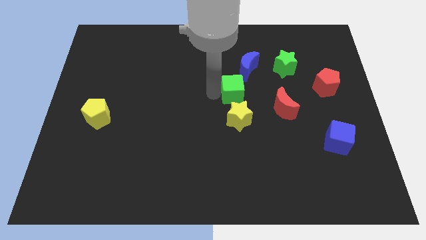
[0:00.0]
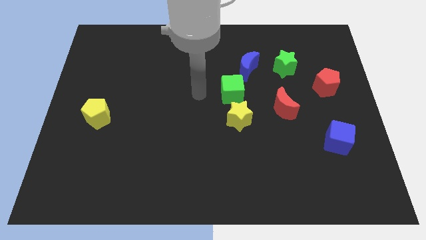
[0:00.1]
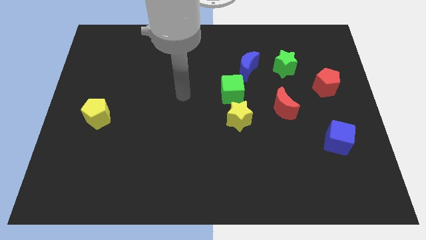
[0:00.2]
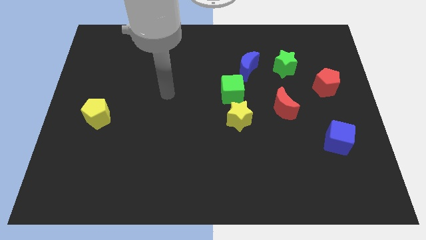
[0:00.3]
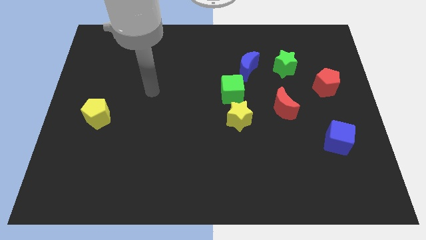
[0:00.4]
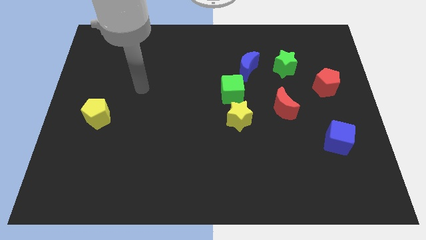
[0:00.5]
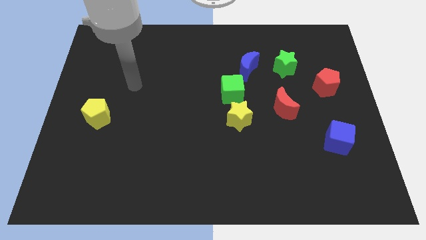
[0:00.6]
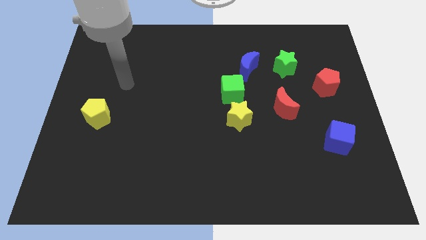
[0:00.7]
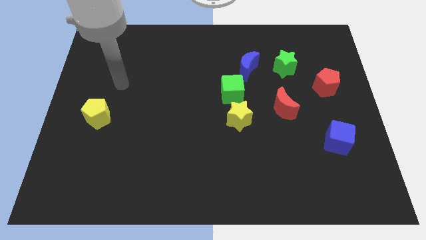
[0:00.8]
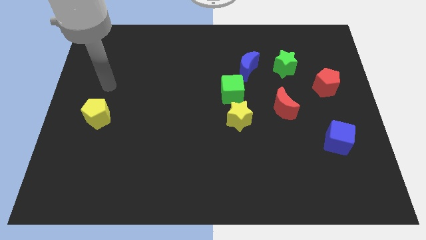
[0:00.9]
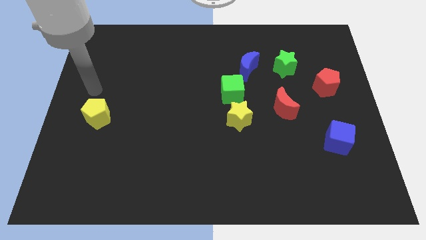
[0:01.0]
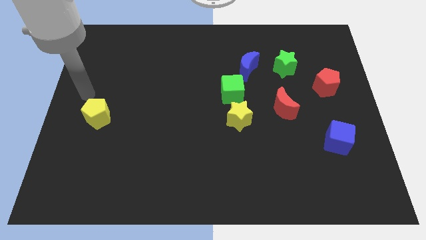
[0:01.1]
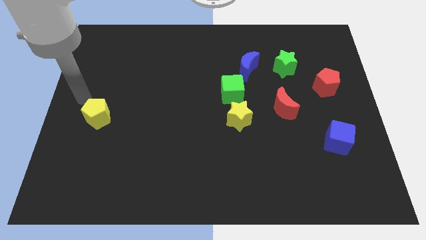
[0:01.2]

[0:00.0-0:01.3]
move your arm away from the green cube

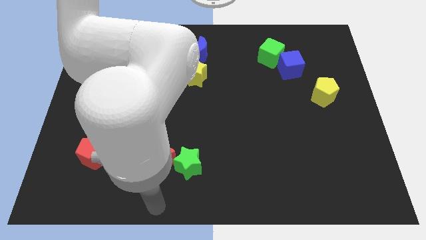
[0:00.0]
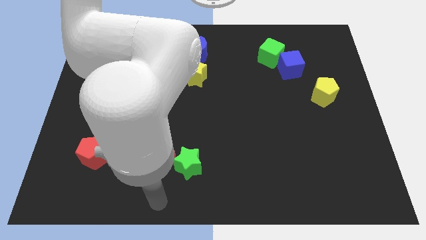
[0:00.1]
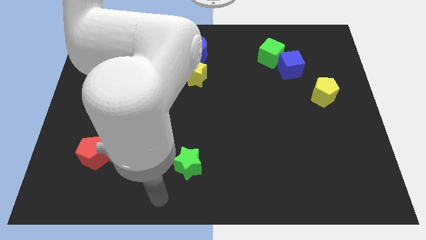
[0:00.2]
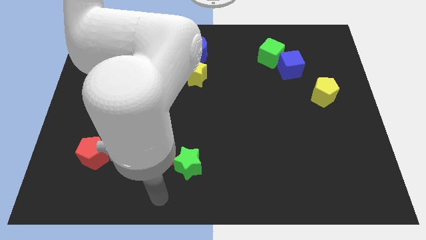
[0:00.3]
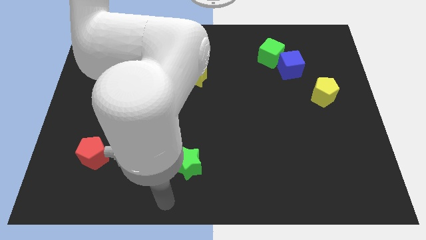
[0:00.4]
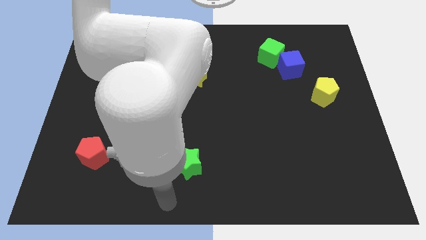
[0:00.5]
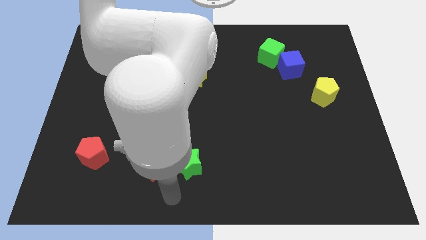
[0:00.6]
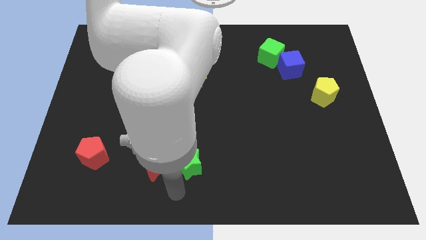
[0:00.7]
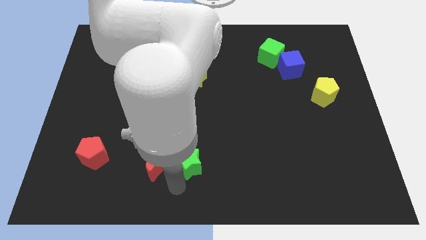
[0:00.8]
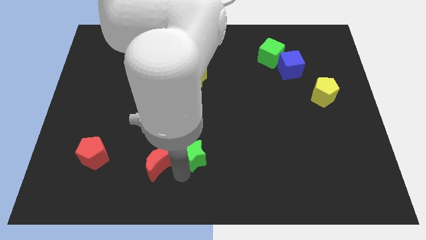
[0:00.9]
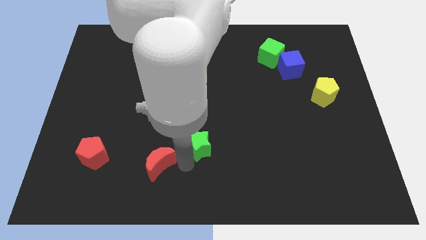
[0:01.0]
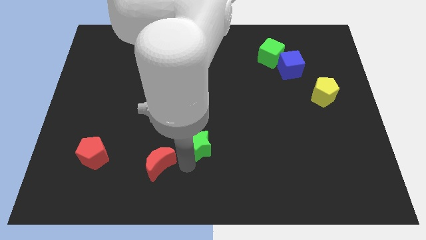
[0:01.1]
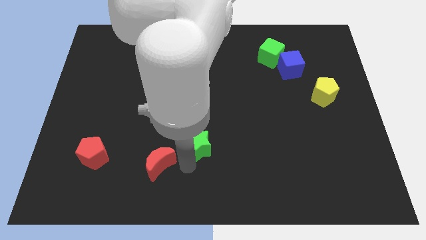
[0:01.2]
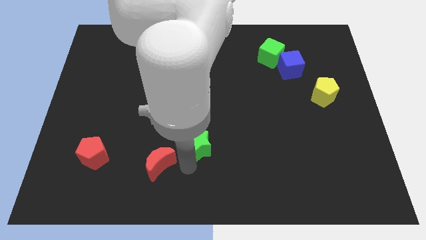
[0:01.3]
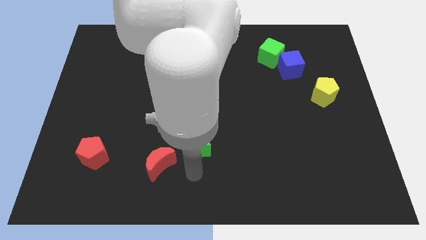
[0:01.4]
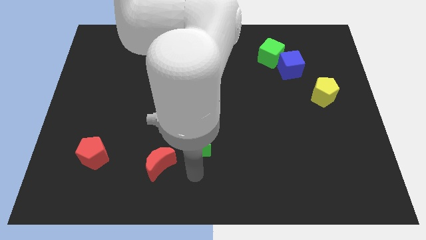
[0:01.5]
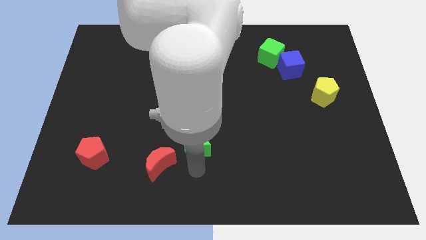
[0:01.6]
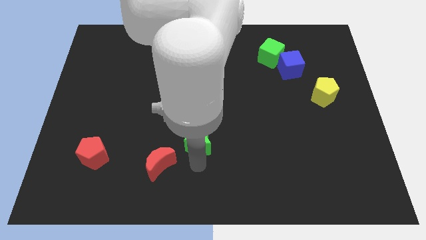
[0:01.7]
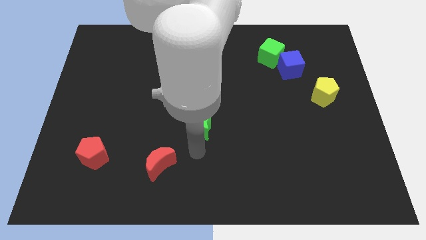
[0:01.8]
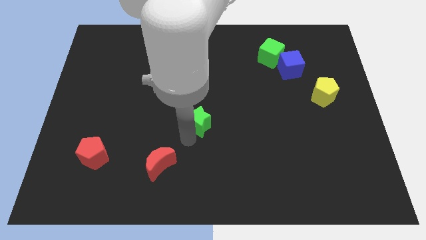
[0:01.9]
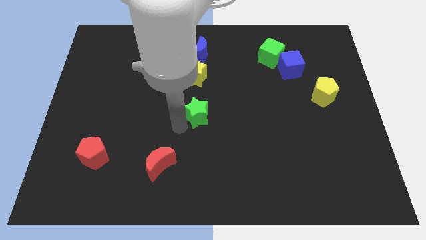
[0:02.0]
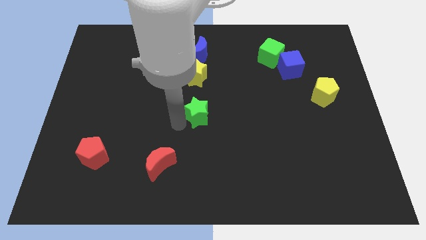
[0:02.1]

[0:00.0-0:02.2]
separate green star from red crescent

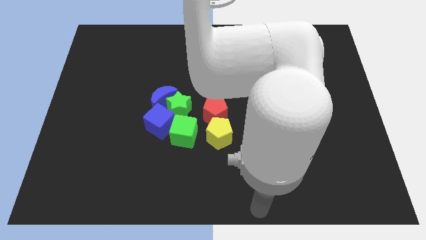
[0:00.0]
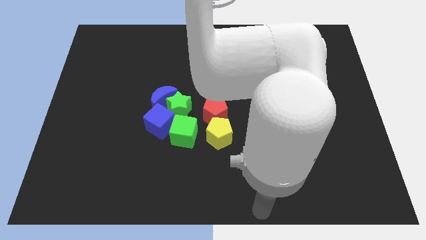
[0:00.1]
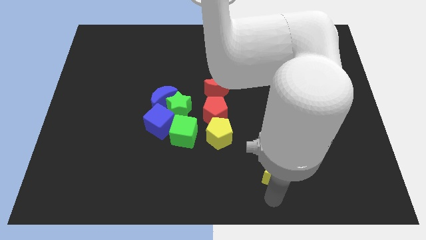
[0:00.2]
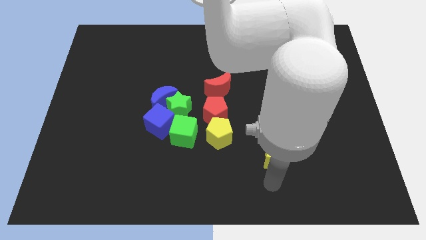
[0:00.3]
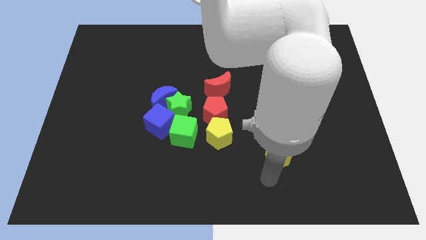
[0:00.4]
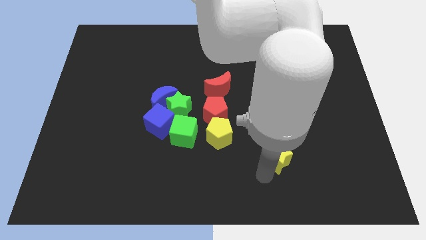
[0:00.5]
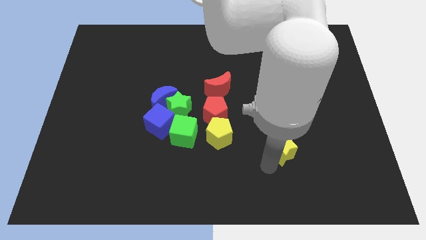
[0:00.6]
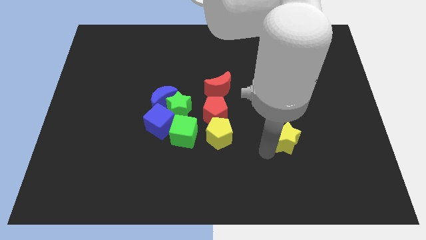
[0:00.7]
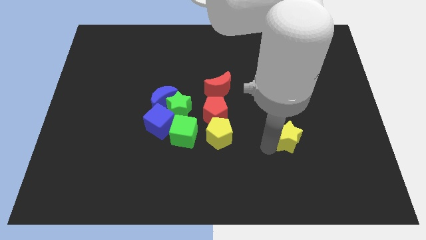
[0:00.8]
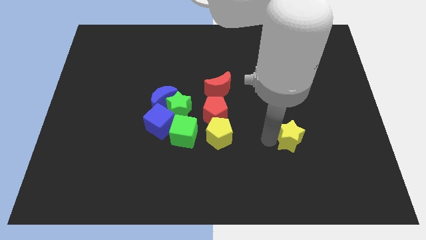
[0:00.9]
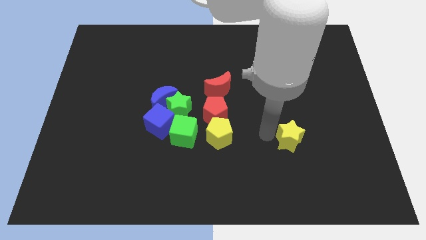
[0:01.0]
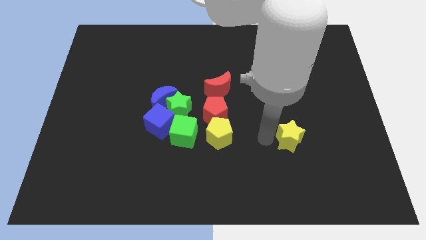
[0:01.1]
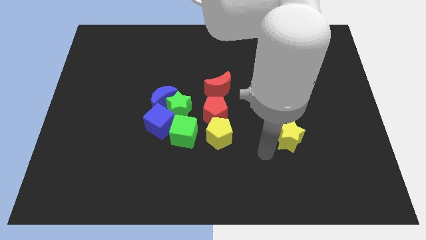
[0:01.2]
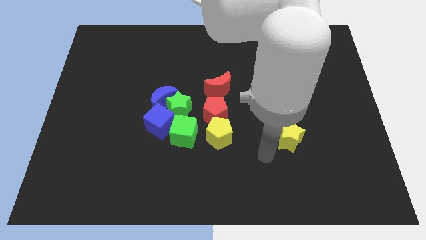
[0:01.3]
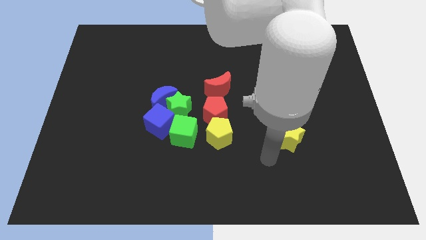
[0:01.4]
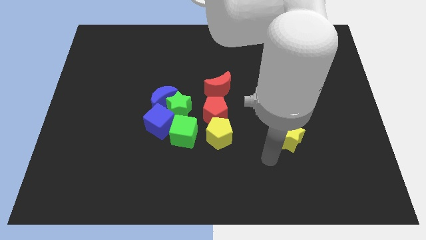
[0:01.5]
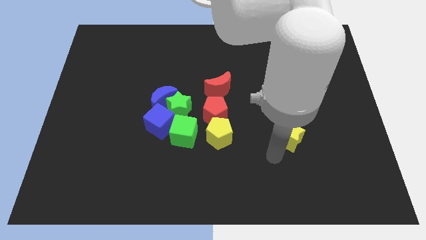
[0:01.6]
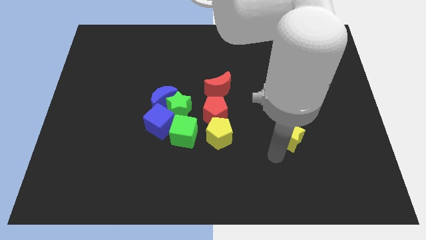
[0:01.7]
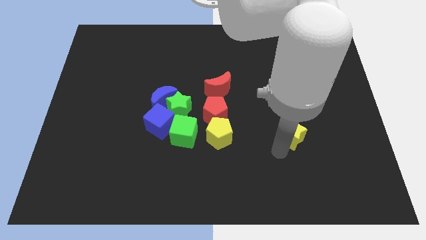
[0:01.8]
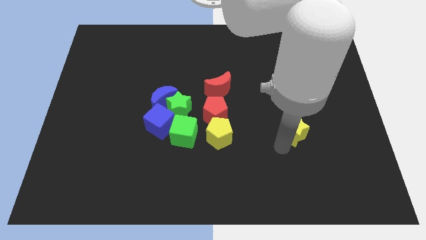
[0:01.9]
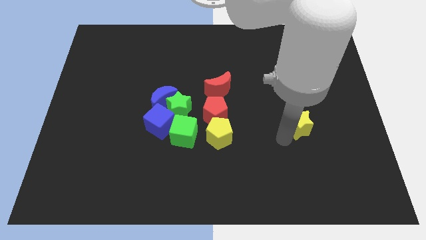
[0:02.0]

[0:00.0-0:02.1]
push the yellow star horizontally to the right side of the yellow pentagon

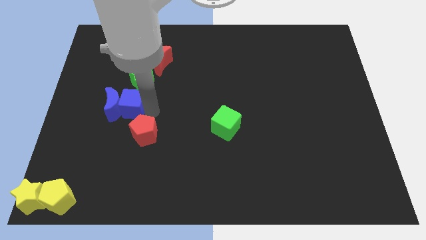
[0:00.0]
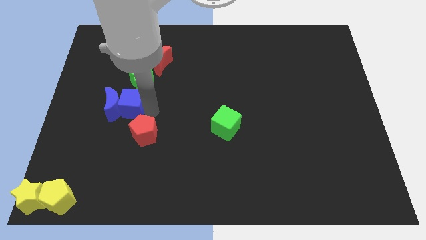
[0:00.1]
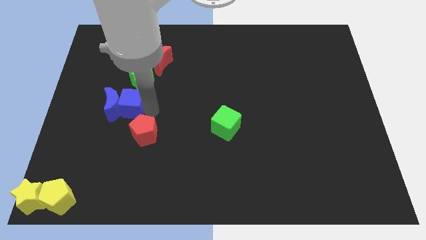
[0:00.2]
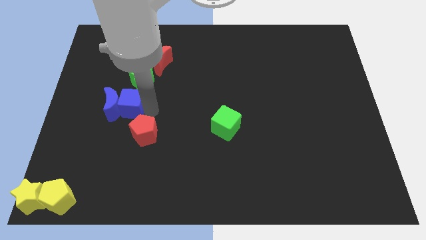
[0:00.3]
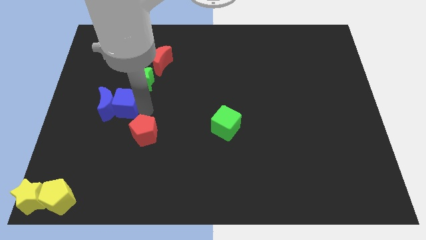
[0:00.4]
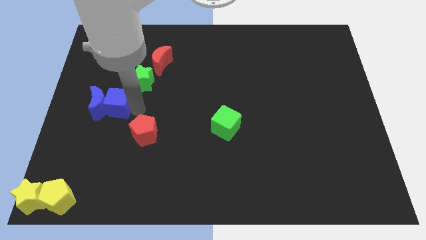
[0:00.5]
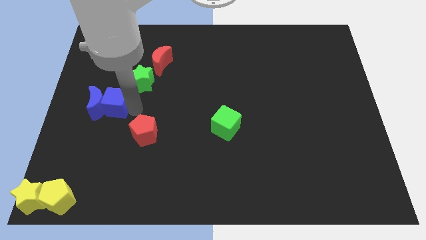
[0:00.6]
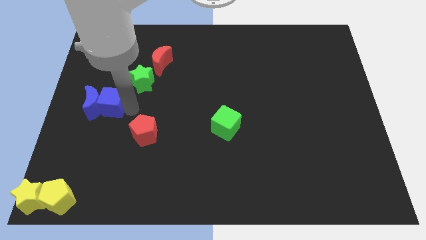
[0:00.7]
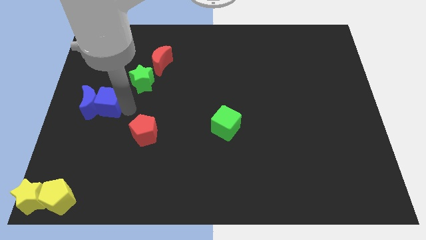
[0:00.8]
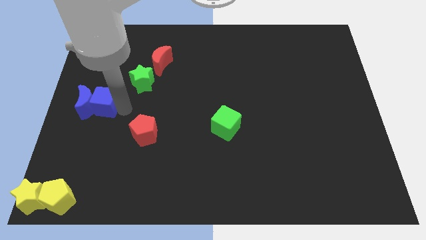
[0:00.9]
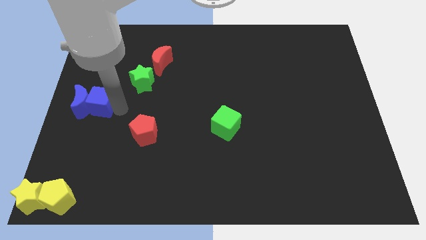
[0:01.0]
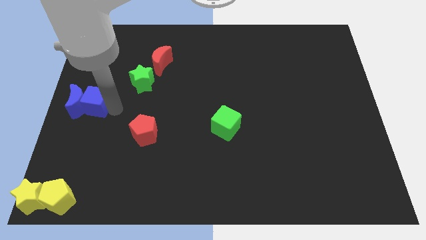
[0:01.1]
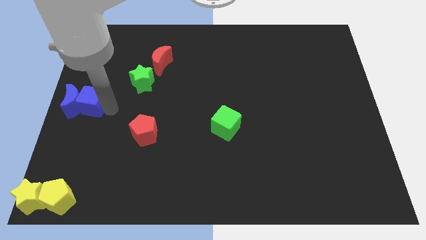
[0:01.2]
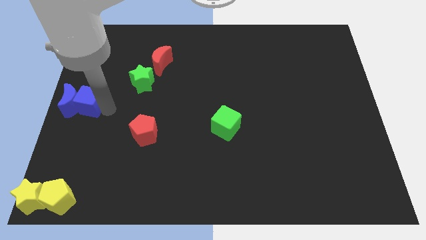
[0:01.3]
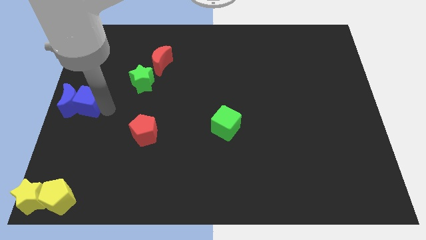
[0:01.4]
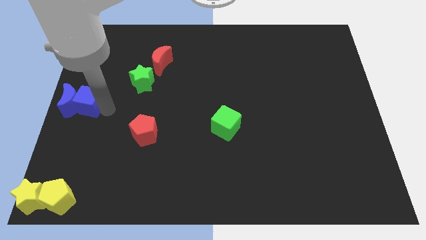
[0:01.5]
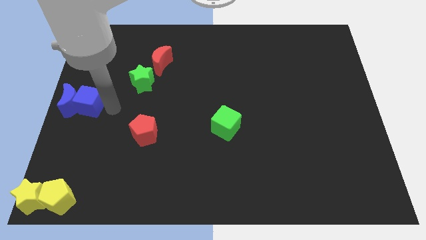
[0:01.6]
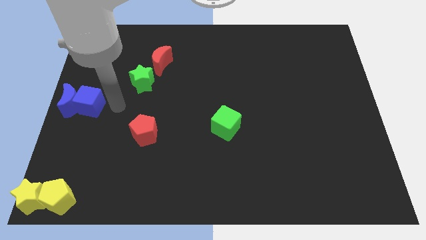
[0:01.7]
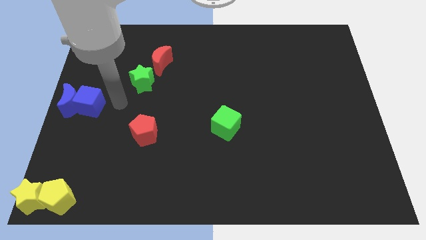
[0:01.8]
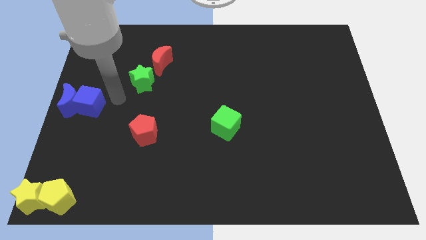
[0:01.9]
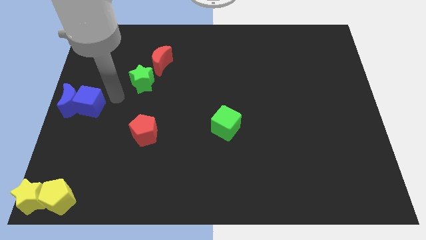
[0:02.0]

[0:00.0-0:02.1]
place both the blue blocks at the center left corner

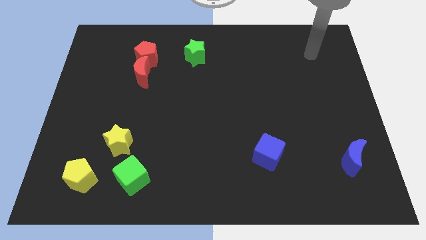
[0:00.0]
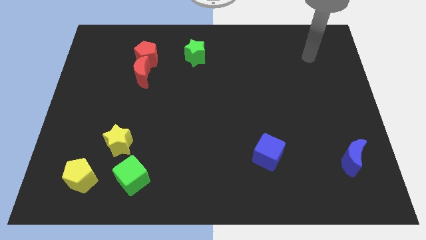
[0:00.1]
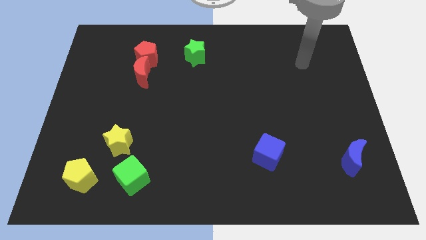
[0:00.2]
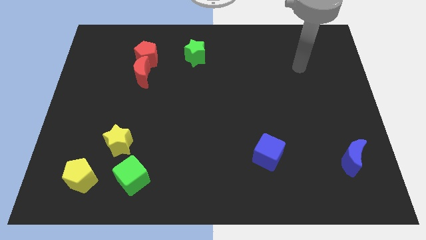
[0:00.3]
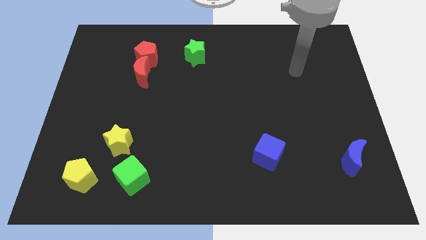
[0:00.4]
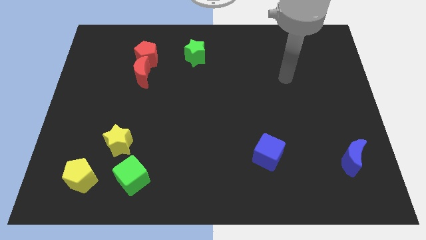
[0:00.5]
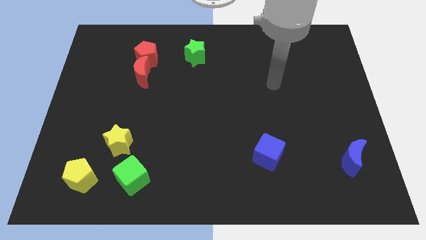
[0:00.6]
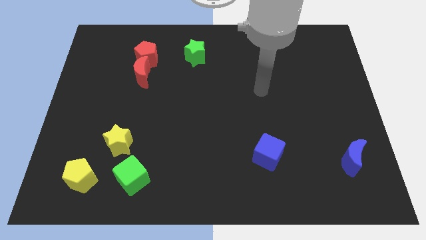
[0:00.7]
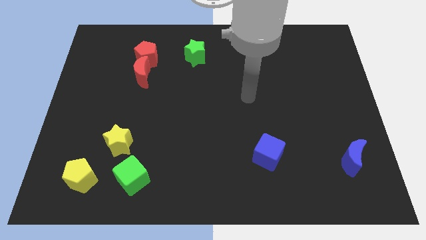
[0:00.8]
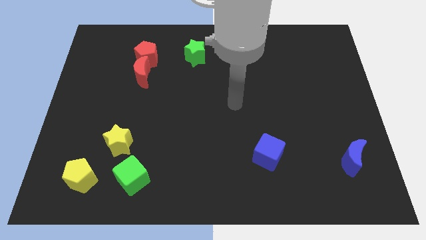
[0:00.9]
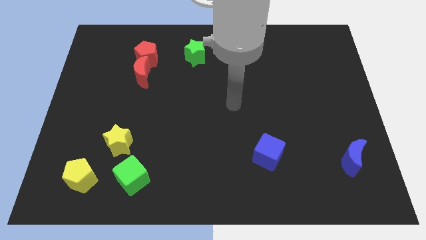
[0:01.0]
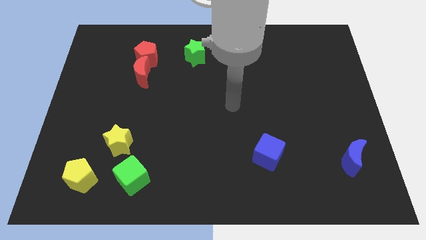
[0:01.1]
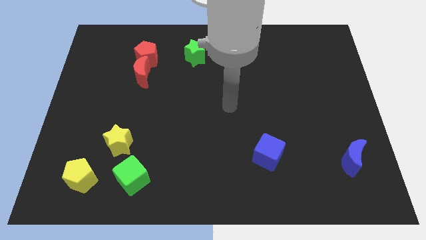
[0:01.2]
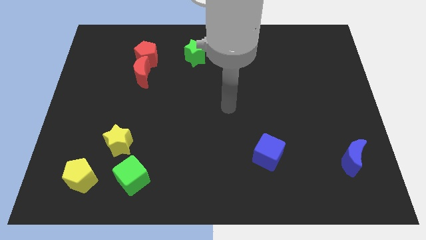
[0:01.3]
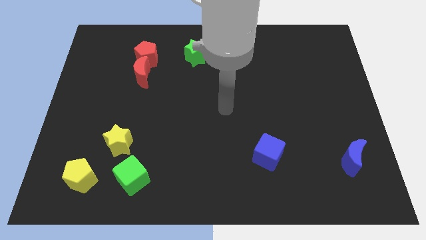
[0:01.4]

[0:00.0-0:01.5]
put your hand in between the green star and blue cube
